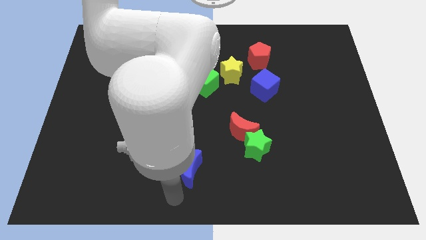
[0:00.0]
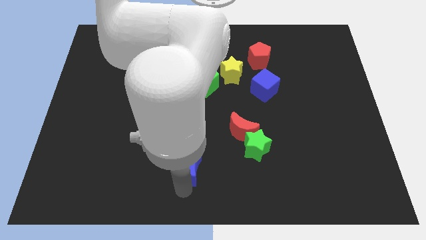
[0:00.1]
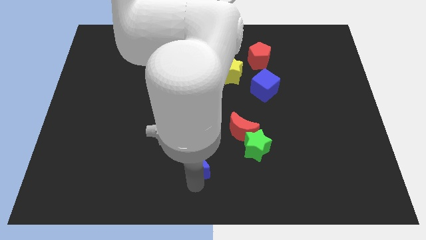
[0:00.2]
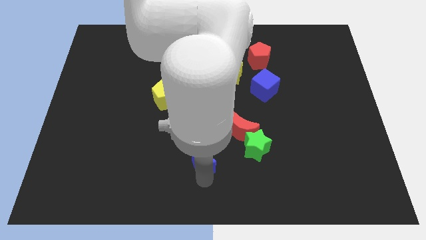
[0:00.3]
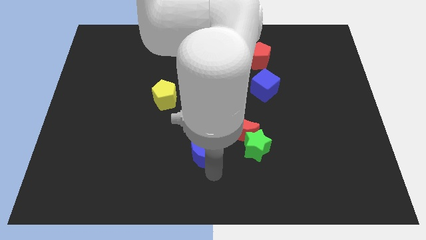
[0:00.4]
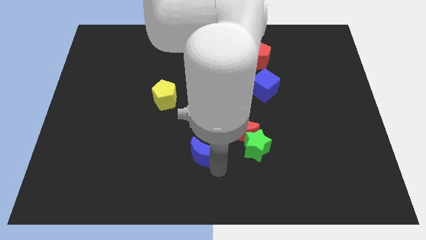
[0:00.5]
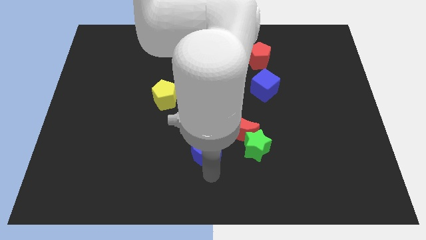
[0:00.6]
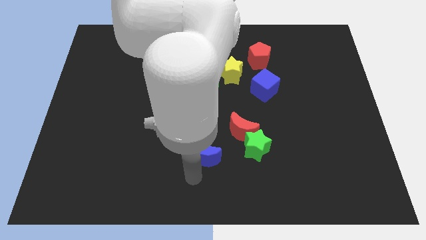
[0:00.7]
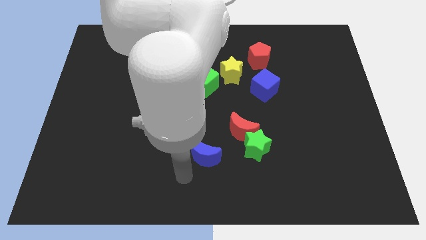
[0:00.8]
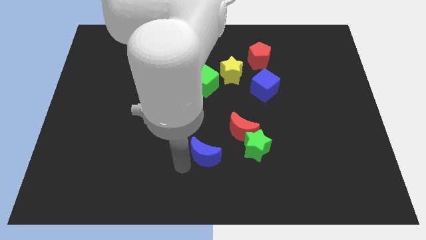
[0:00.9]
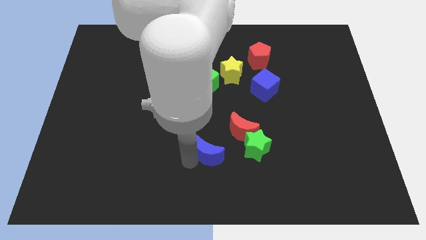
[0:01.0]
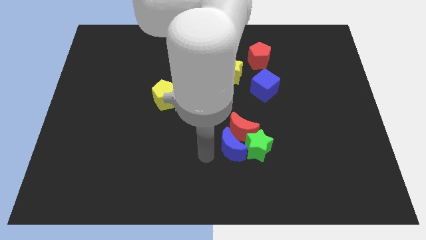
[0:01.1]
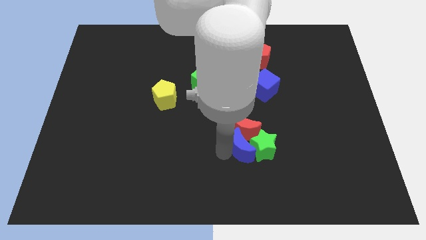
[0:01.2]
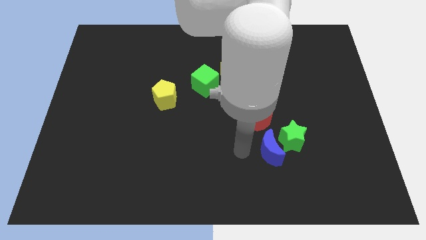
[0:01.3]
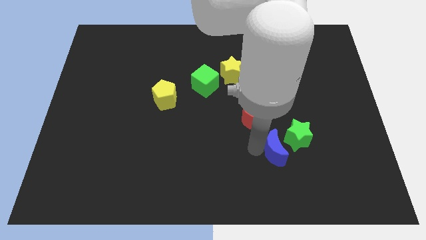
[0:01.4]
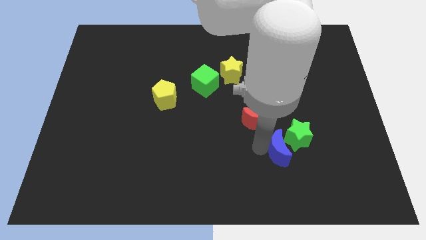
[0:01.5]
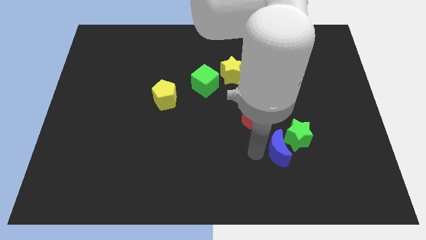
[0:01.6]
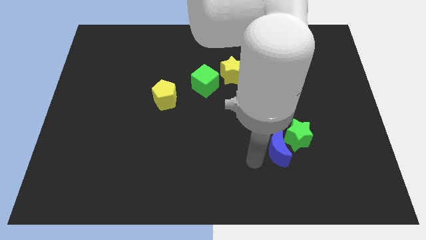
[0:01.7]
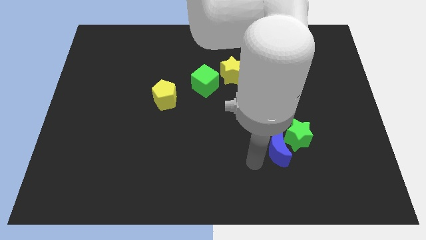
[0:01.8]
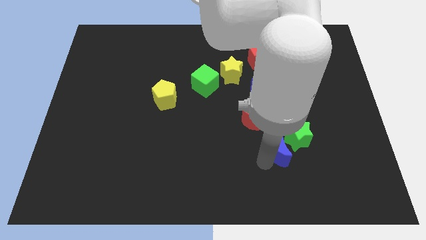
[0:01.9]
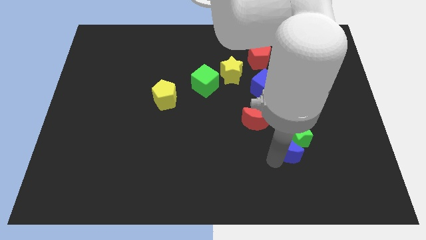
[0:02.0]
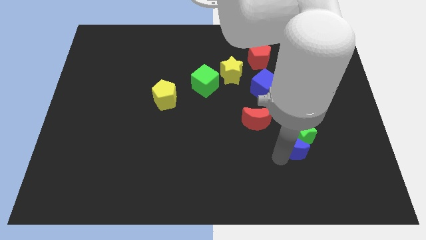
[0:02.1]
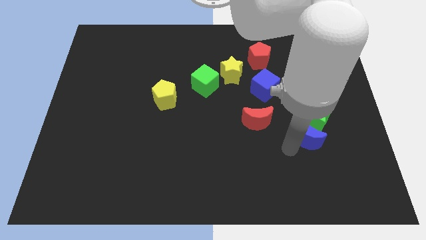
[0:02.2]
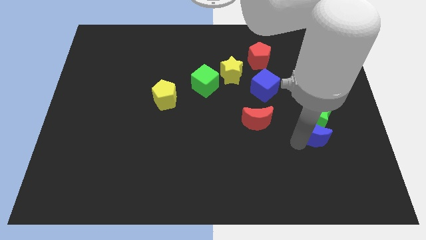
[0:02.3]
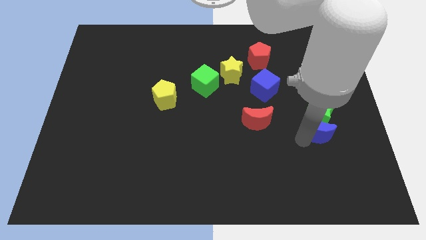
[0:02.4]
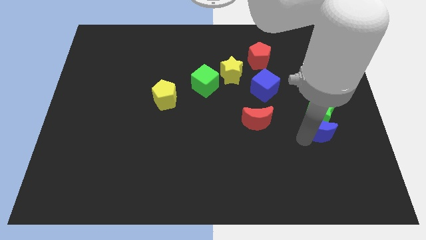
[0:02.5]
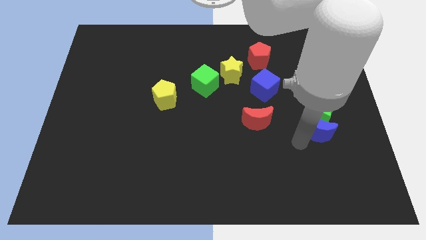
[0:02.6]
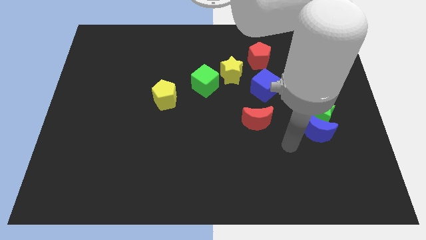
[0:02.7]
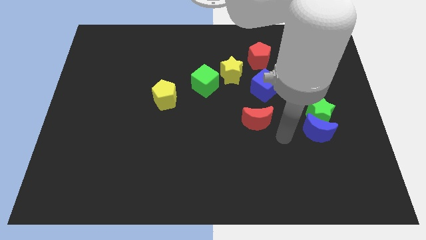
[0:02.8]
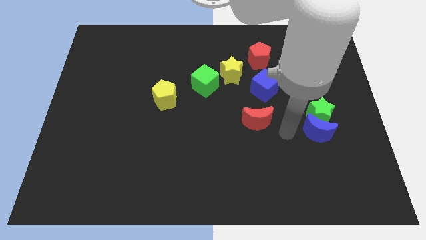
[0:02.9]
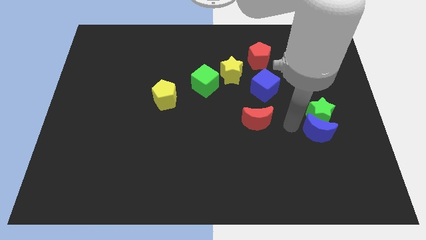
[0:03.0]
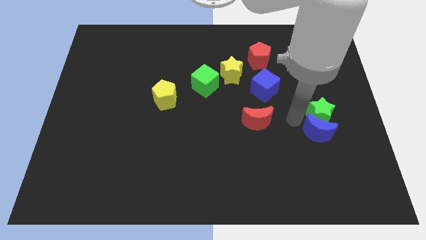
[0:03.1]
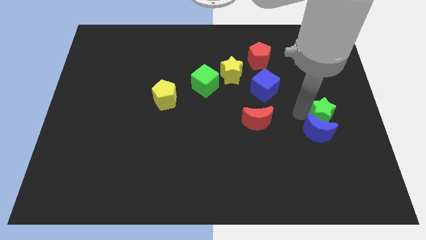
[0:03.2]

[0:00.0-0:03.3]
place the blue crescent below the green star

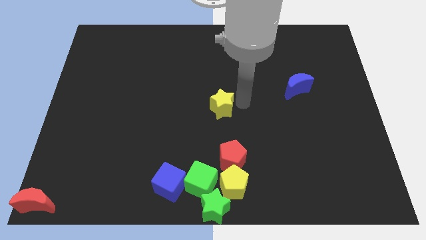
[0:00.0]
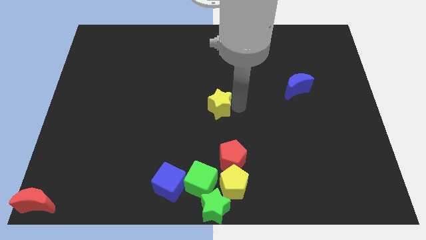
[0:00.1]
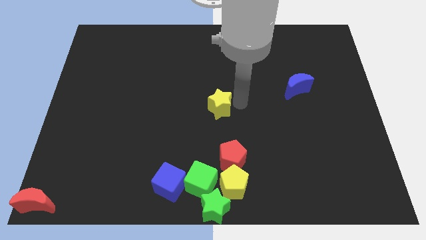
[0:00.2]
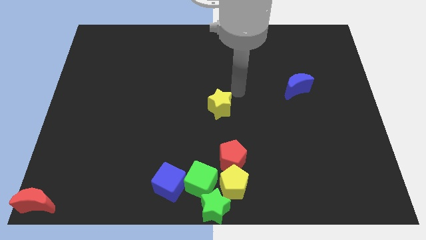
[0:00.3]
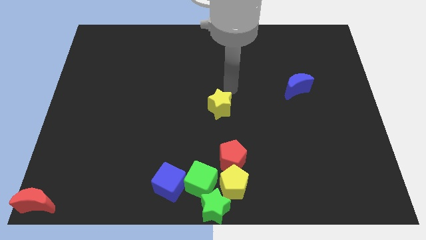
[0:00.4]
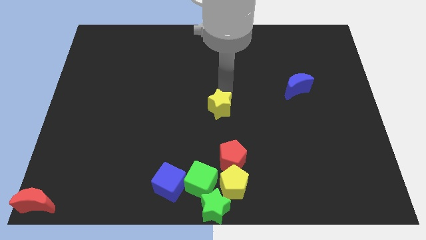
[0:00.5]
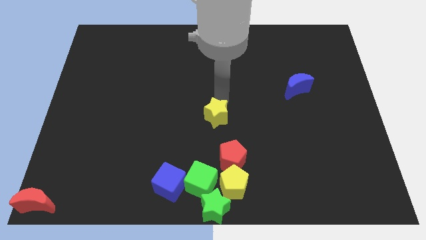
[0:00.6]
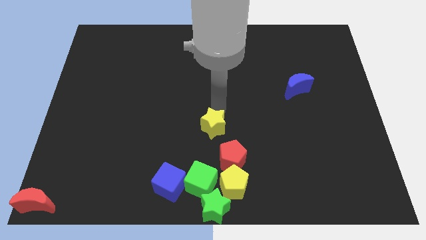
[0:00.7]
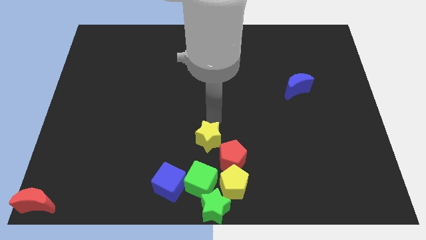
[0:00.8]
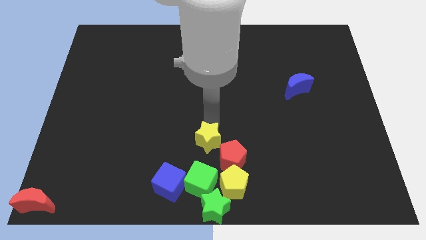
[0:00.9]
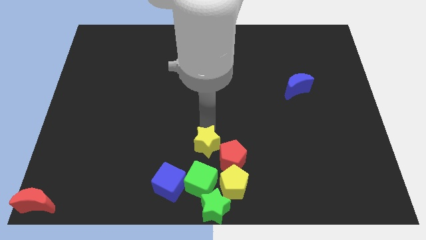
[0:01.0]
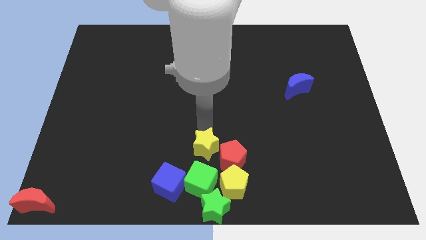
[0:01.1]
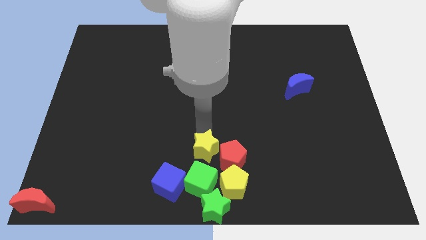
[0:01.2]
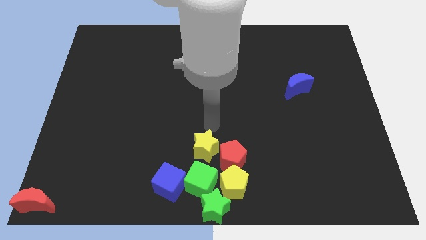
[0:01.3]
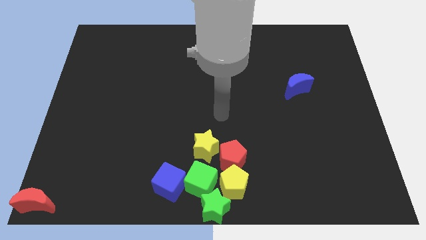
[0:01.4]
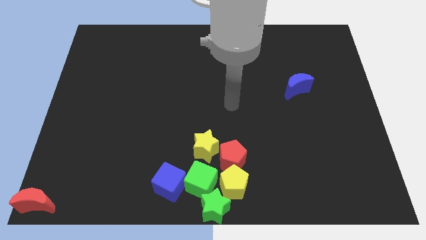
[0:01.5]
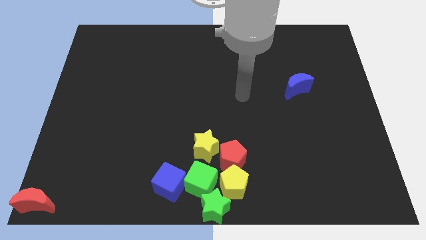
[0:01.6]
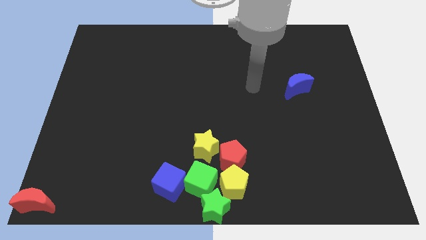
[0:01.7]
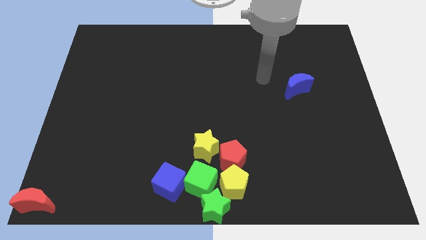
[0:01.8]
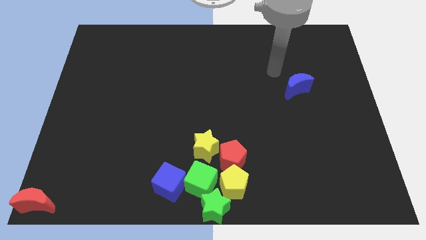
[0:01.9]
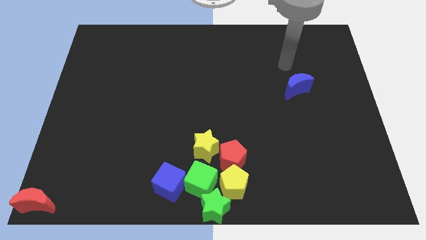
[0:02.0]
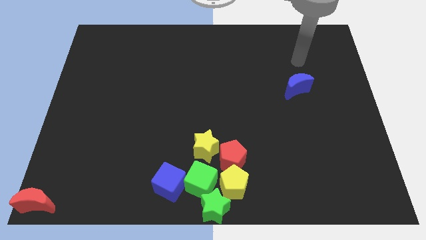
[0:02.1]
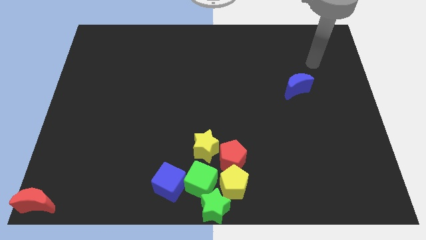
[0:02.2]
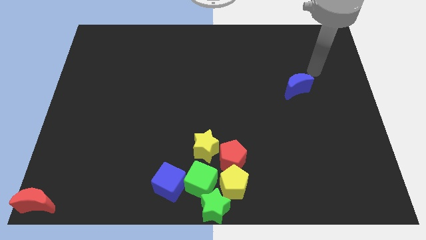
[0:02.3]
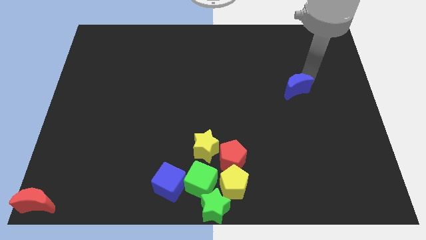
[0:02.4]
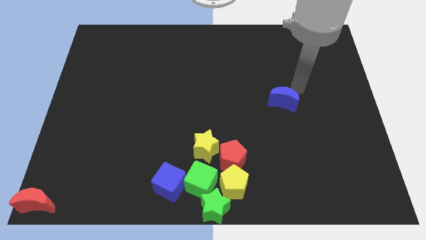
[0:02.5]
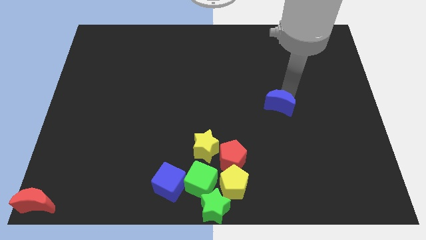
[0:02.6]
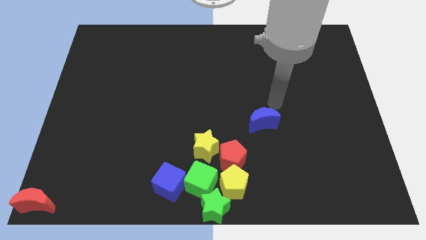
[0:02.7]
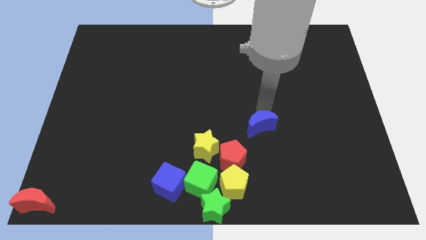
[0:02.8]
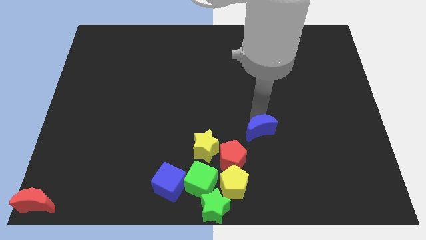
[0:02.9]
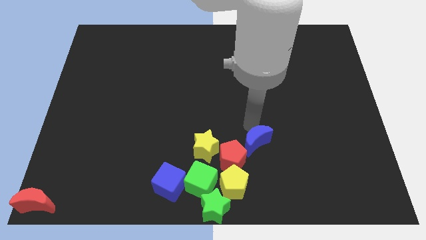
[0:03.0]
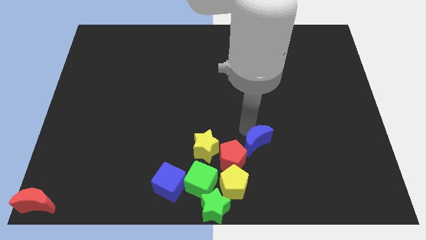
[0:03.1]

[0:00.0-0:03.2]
place the yellow star blue moon into the group of blocks

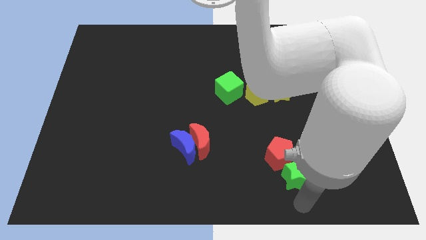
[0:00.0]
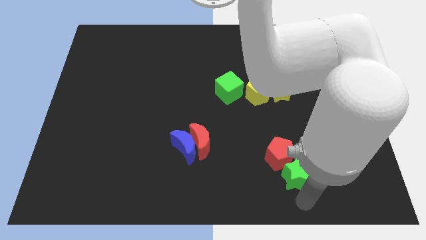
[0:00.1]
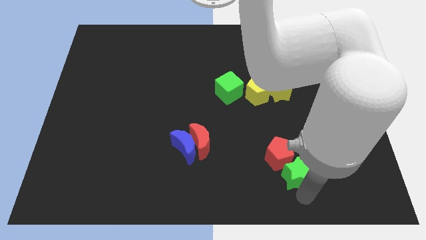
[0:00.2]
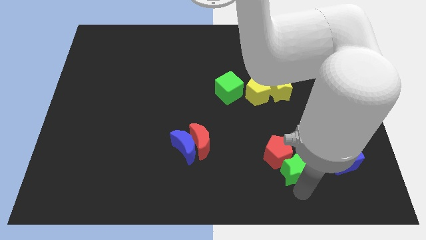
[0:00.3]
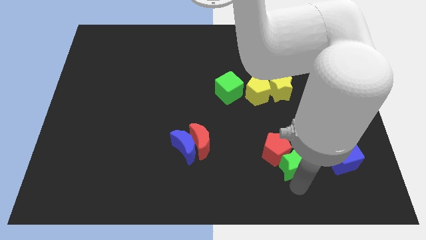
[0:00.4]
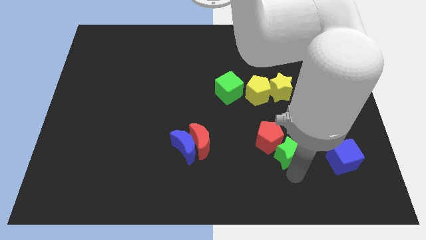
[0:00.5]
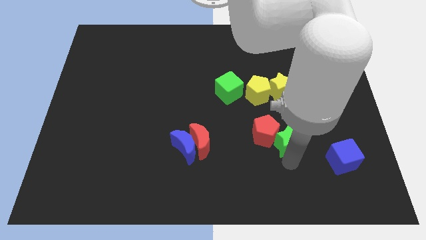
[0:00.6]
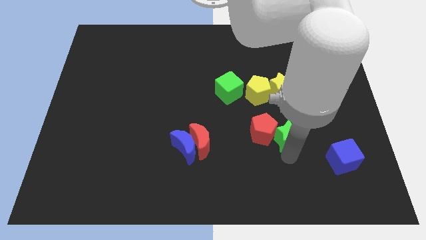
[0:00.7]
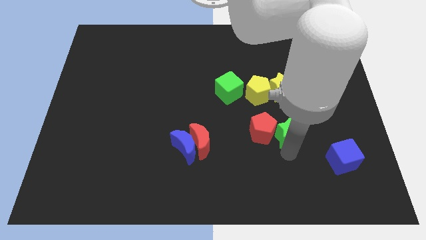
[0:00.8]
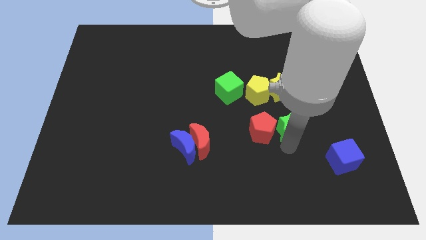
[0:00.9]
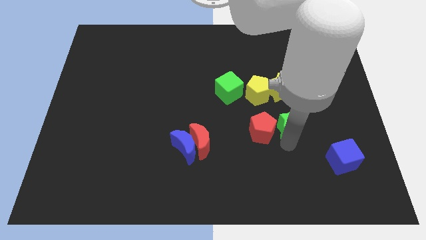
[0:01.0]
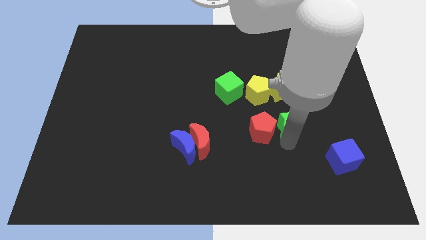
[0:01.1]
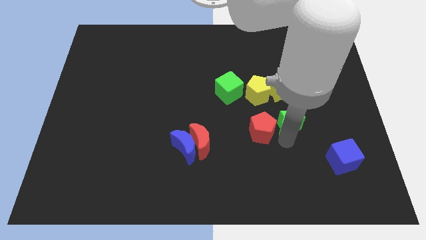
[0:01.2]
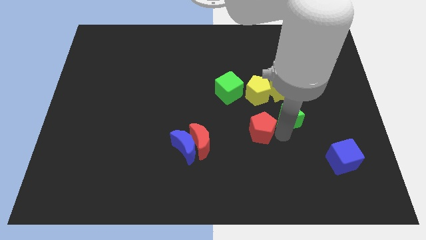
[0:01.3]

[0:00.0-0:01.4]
place the green star to the bottom of yellow star

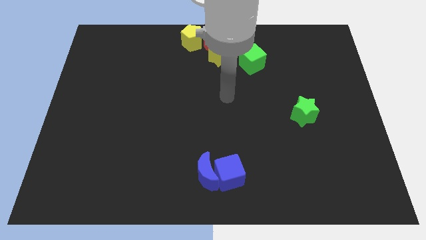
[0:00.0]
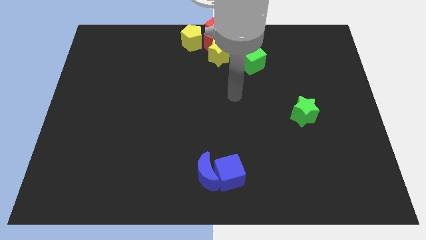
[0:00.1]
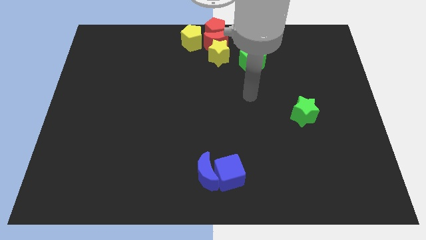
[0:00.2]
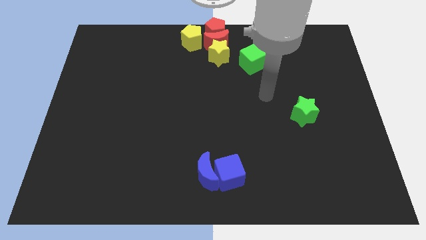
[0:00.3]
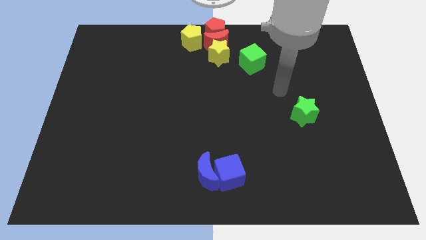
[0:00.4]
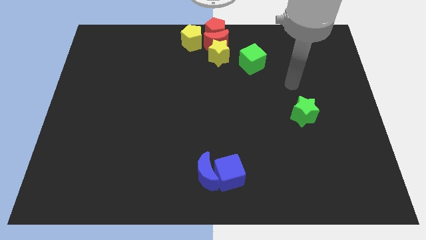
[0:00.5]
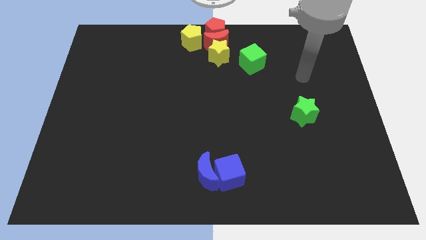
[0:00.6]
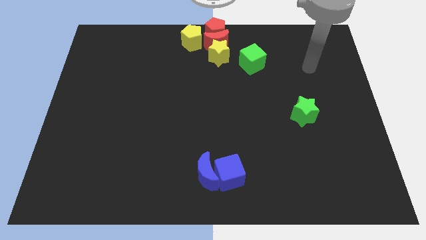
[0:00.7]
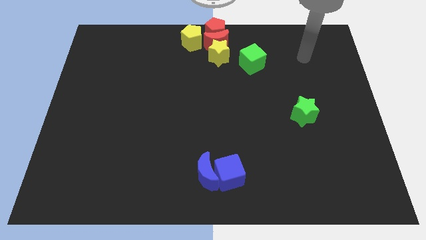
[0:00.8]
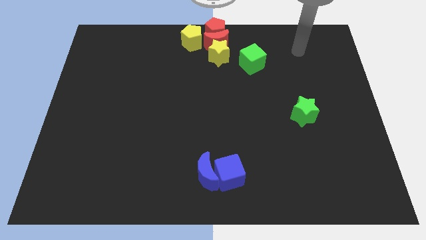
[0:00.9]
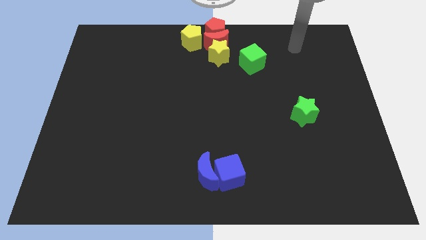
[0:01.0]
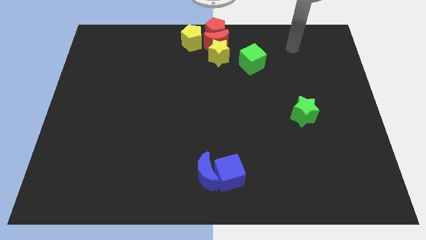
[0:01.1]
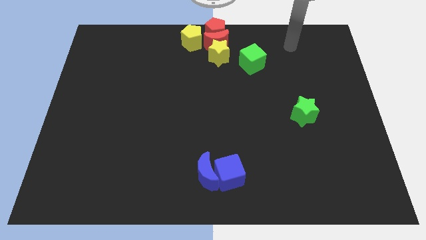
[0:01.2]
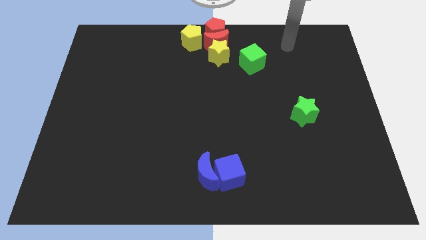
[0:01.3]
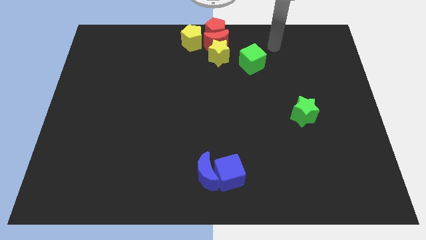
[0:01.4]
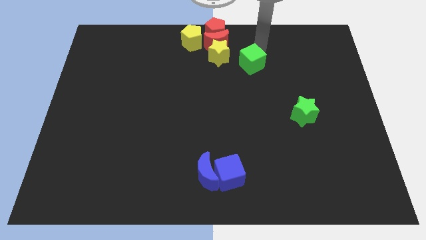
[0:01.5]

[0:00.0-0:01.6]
move your arm to the right top of the green cube
